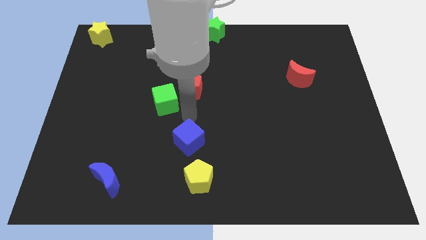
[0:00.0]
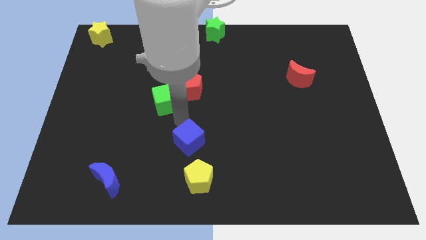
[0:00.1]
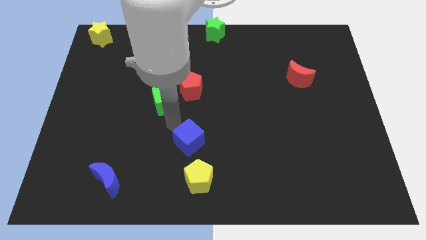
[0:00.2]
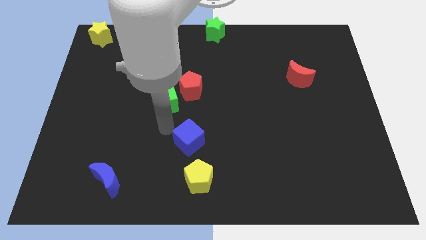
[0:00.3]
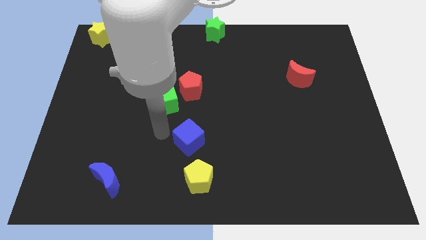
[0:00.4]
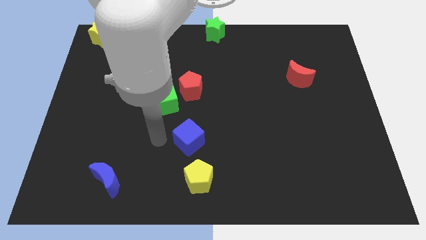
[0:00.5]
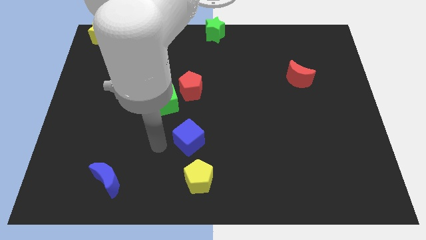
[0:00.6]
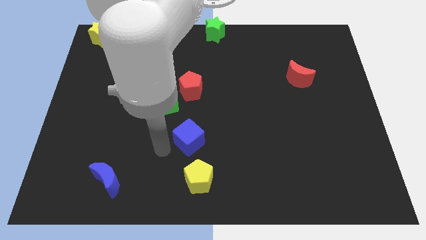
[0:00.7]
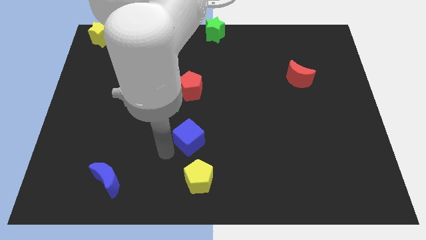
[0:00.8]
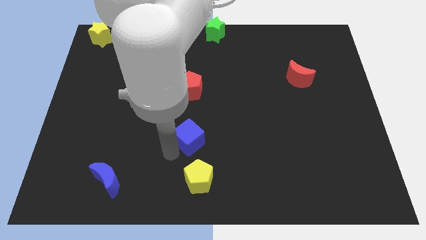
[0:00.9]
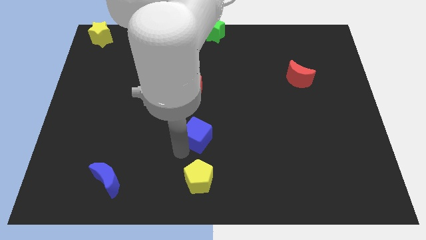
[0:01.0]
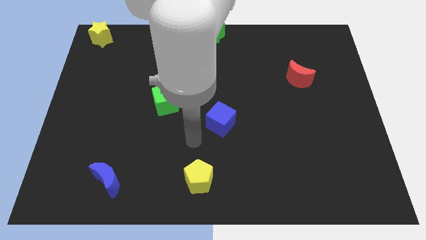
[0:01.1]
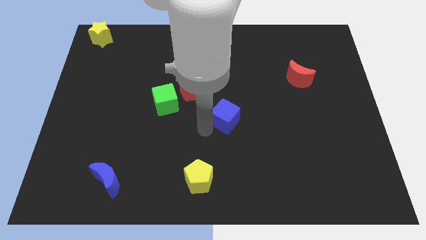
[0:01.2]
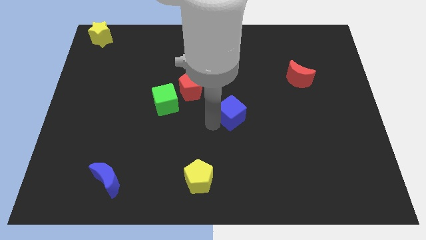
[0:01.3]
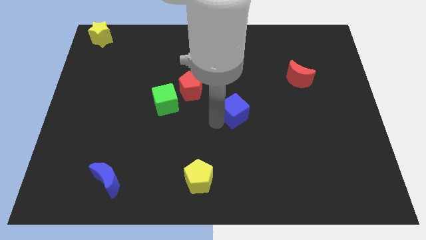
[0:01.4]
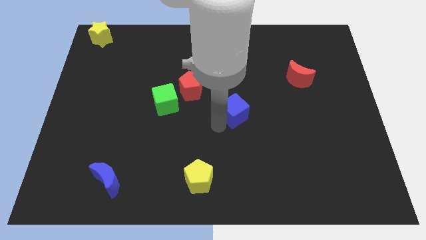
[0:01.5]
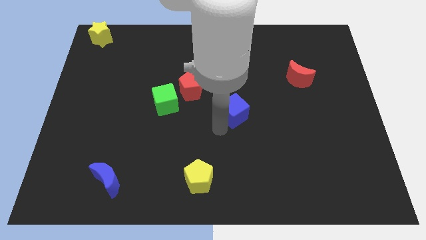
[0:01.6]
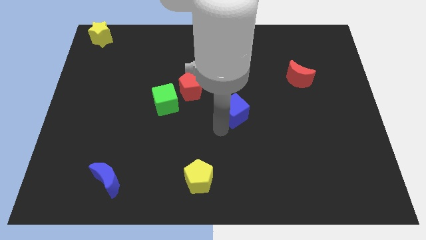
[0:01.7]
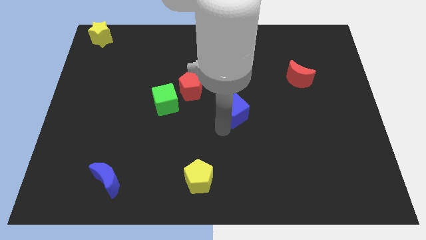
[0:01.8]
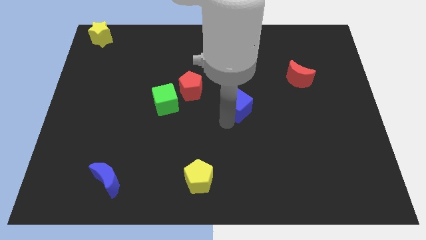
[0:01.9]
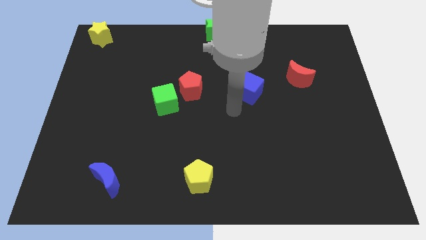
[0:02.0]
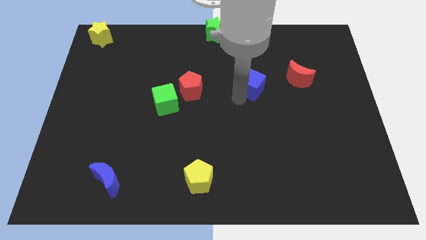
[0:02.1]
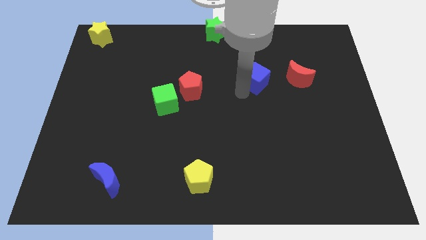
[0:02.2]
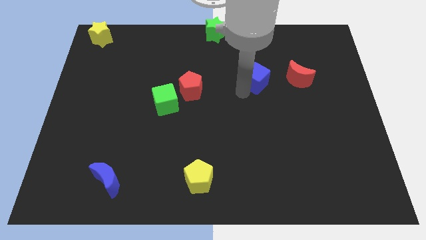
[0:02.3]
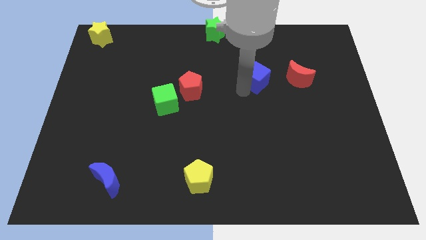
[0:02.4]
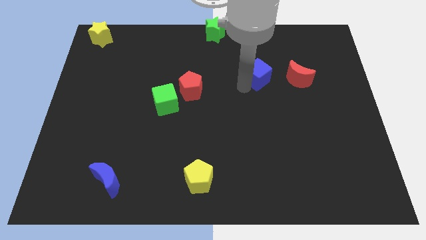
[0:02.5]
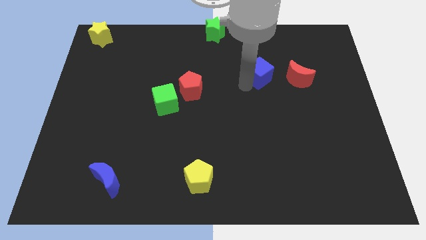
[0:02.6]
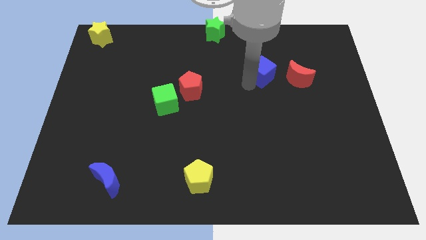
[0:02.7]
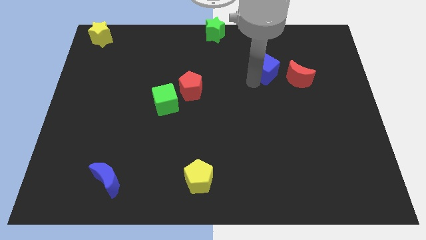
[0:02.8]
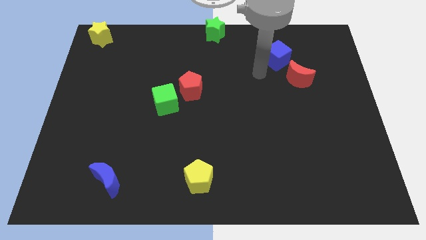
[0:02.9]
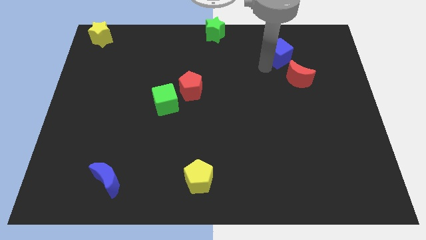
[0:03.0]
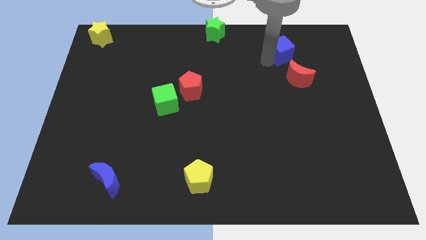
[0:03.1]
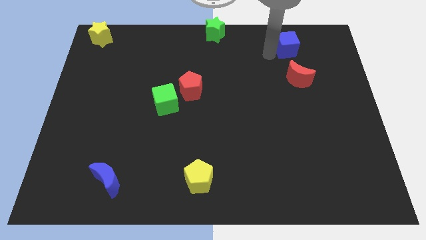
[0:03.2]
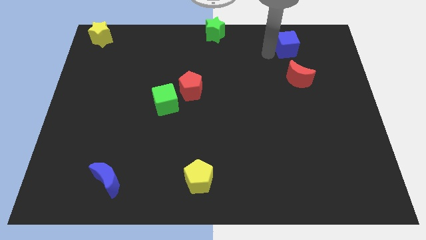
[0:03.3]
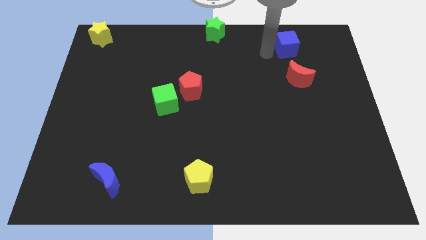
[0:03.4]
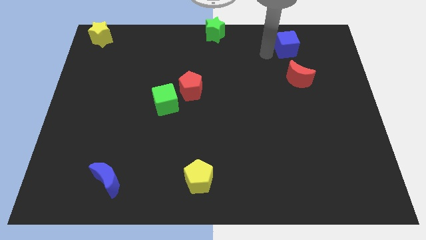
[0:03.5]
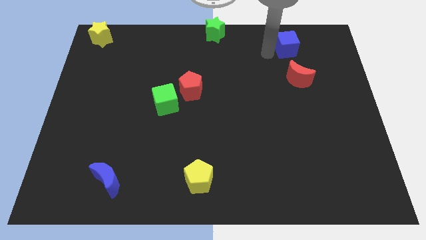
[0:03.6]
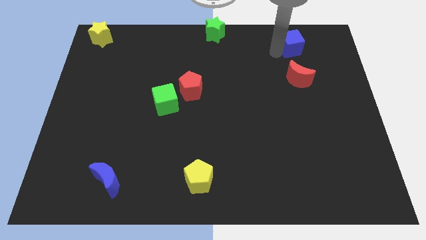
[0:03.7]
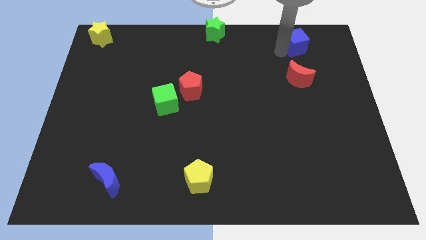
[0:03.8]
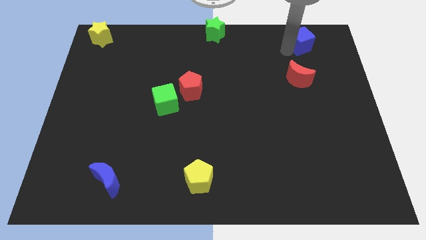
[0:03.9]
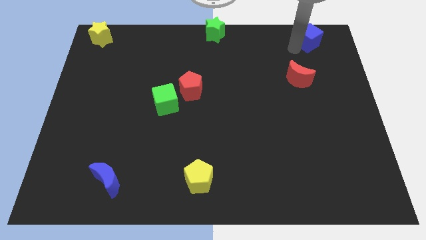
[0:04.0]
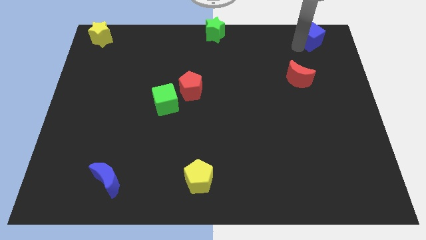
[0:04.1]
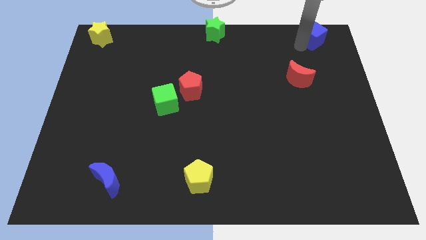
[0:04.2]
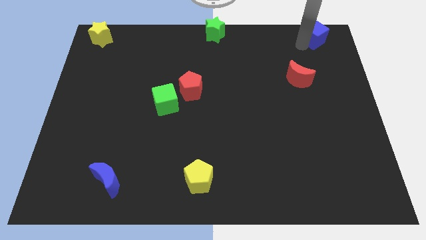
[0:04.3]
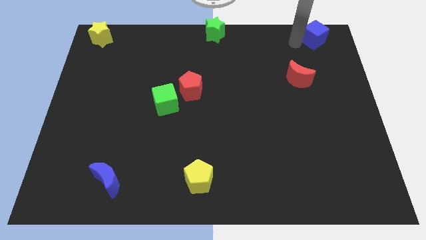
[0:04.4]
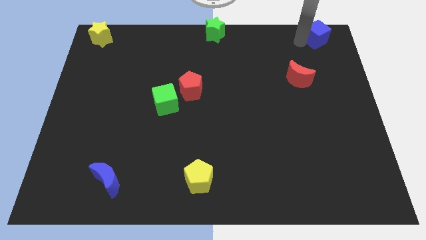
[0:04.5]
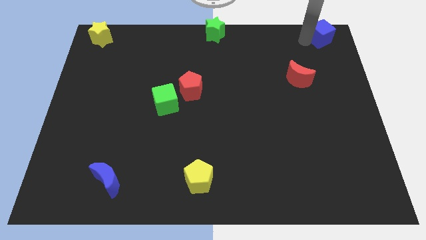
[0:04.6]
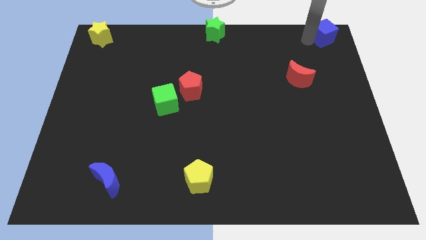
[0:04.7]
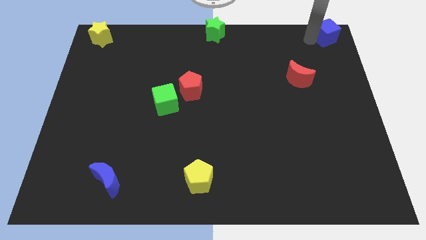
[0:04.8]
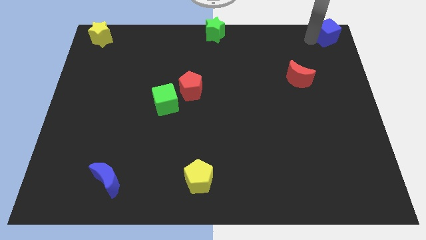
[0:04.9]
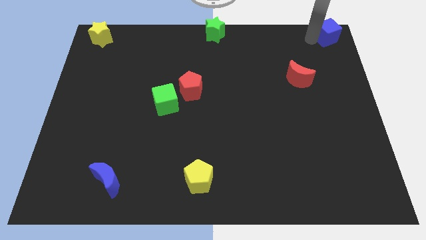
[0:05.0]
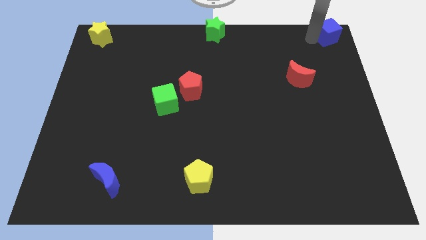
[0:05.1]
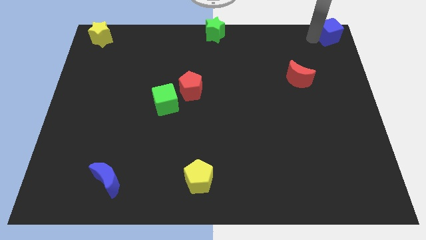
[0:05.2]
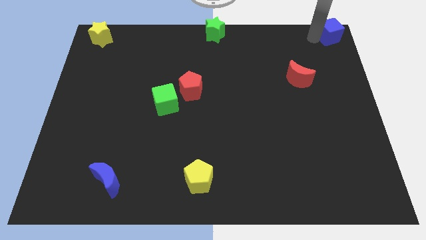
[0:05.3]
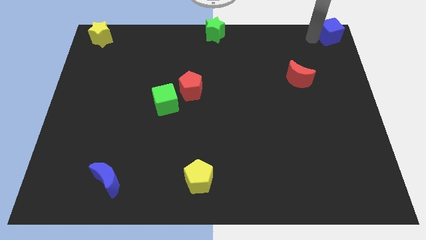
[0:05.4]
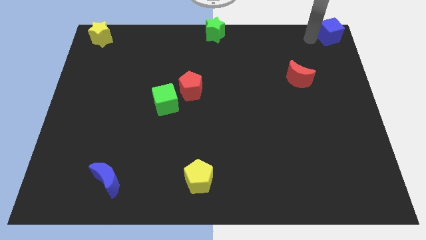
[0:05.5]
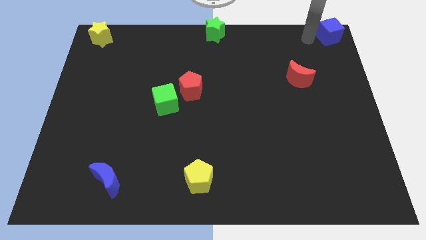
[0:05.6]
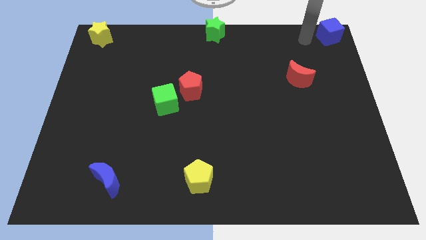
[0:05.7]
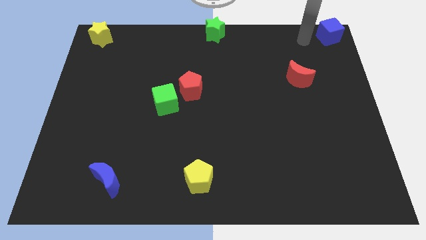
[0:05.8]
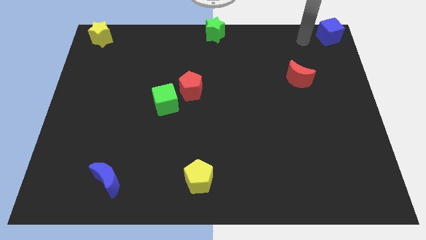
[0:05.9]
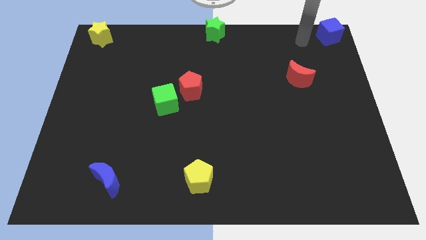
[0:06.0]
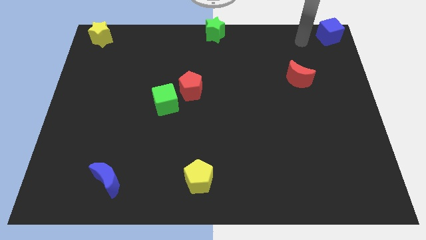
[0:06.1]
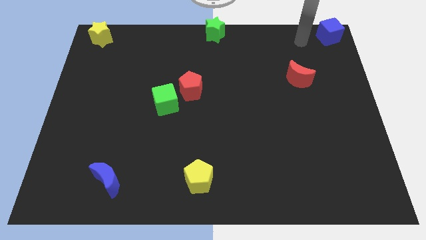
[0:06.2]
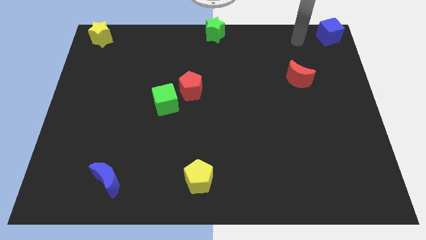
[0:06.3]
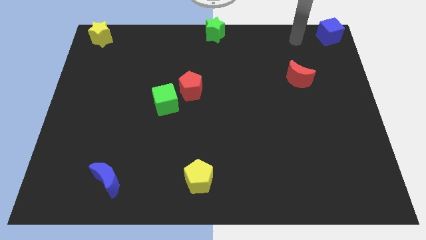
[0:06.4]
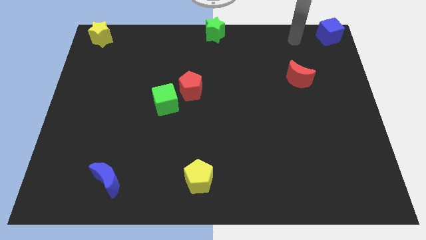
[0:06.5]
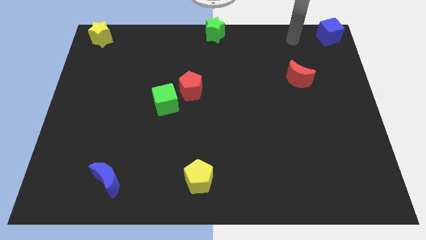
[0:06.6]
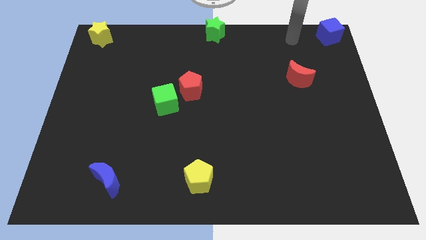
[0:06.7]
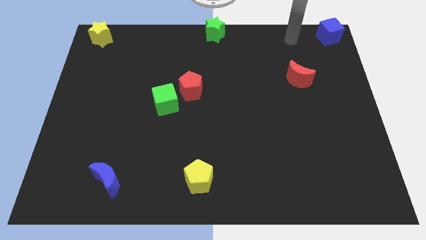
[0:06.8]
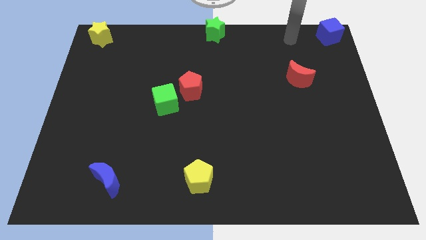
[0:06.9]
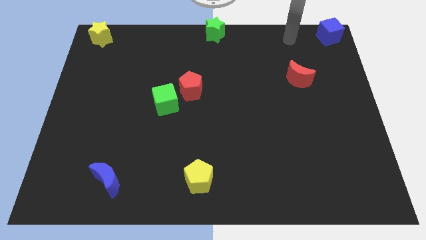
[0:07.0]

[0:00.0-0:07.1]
move blue cube to the top right

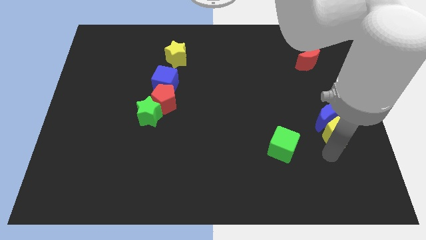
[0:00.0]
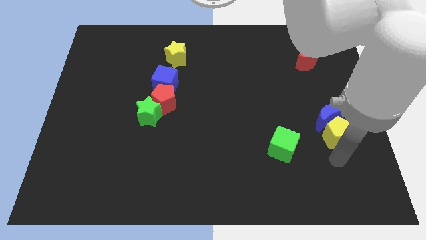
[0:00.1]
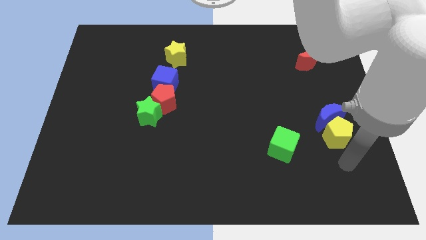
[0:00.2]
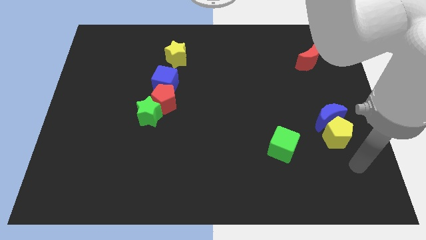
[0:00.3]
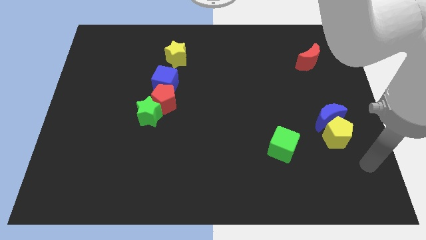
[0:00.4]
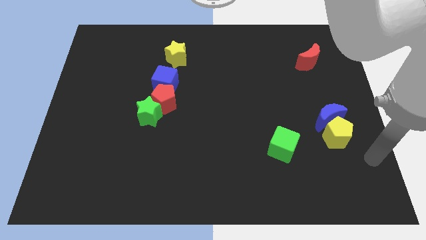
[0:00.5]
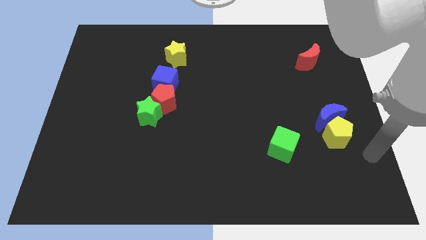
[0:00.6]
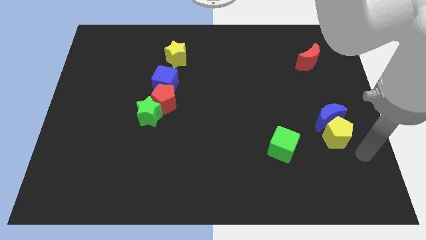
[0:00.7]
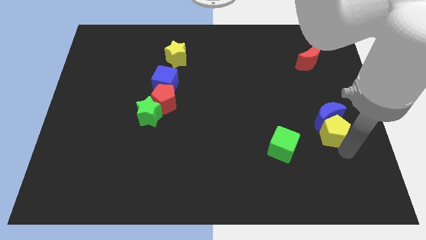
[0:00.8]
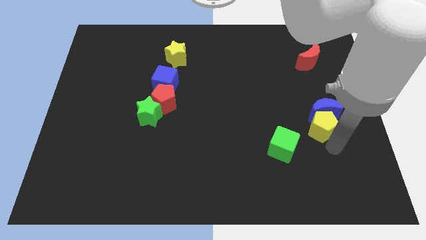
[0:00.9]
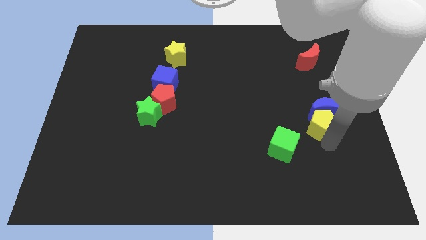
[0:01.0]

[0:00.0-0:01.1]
push yellow pentagon in to blue moon

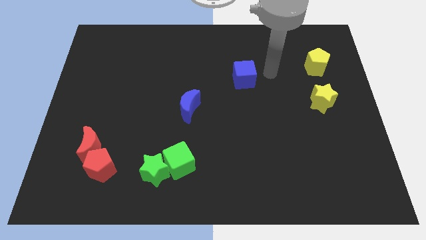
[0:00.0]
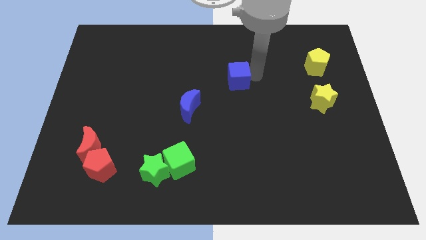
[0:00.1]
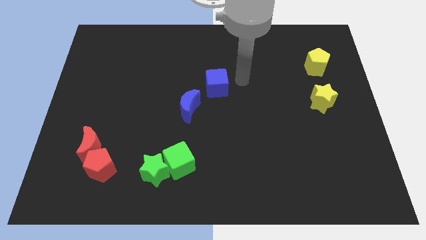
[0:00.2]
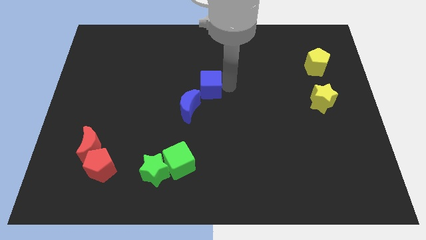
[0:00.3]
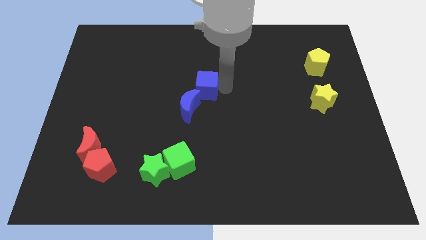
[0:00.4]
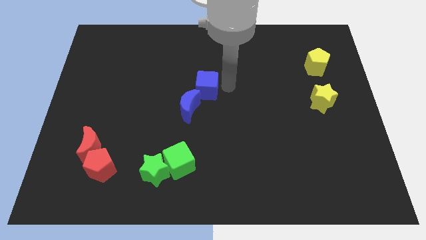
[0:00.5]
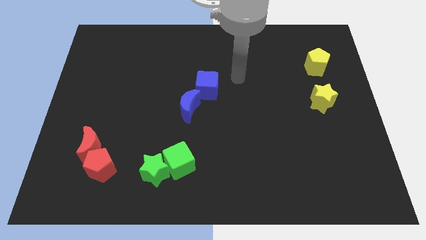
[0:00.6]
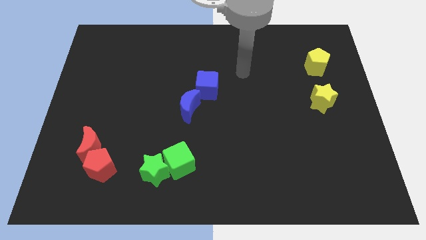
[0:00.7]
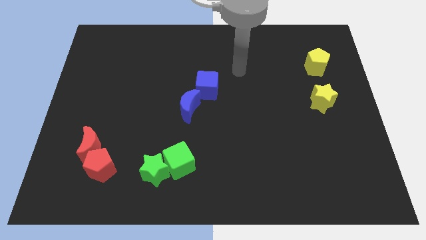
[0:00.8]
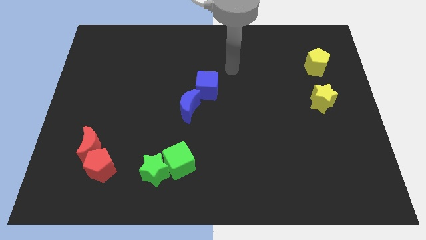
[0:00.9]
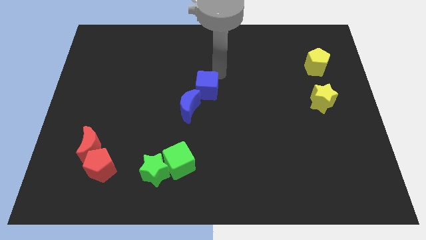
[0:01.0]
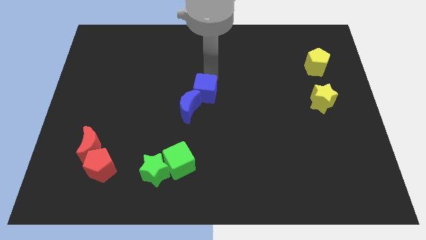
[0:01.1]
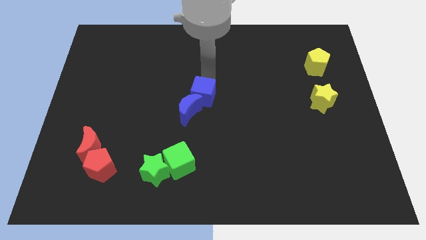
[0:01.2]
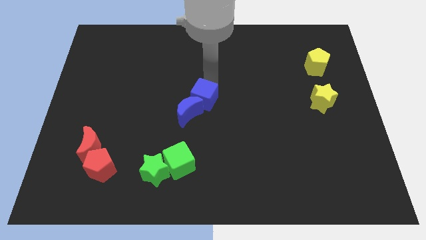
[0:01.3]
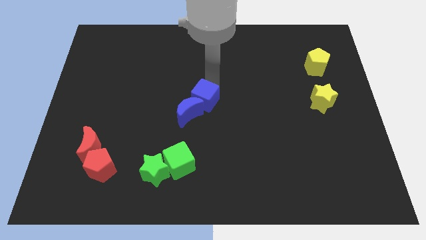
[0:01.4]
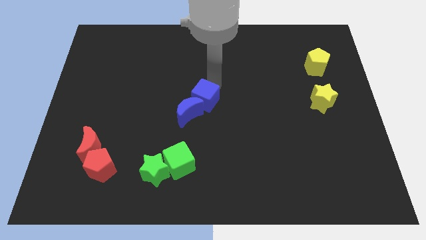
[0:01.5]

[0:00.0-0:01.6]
push the blue cube into the blue crescent
